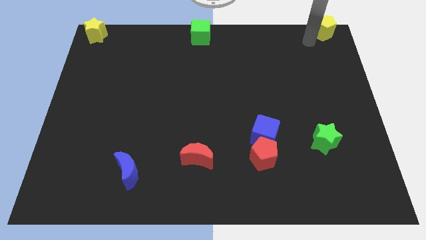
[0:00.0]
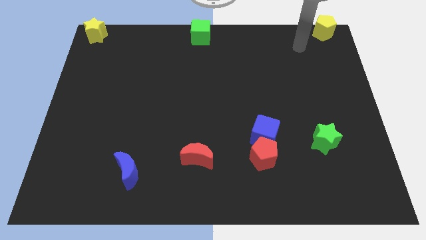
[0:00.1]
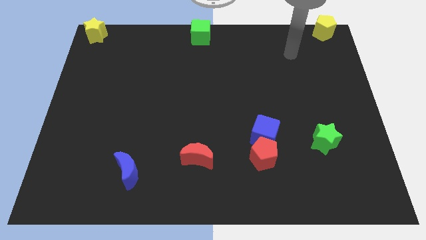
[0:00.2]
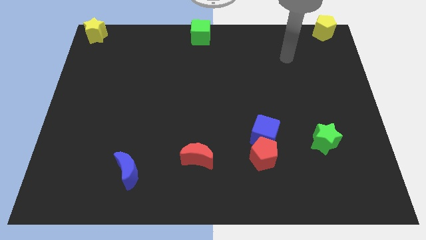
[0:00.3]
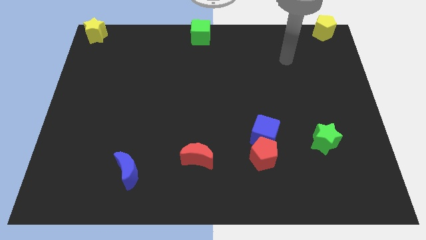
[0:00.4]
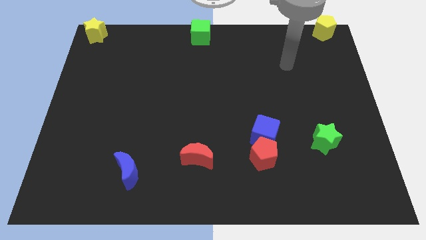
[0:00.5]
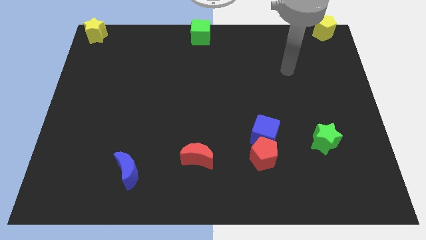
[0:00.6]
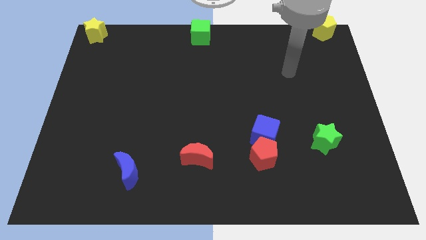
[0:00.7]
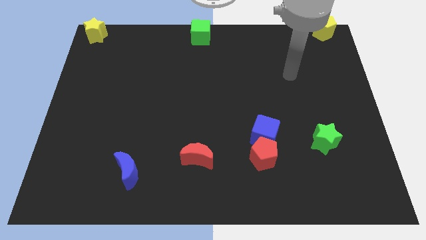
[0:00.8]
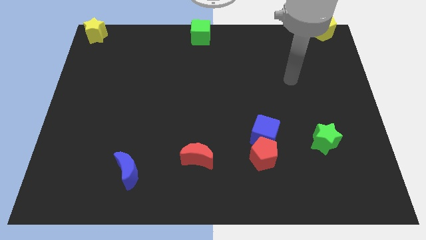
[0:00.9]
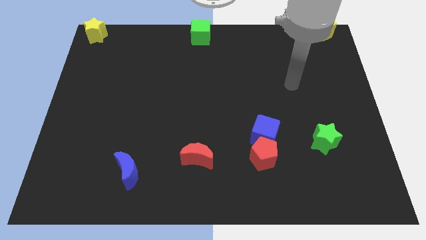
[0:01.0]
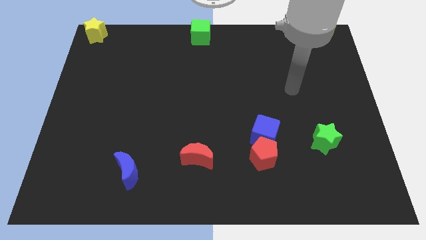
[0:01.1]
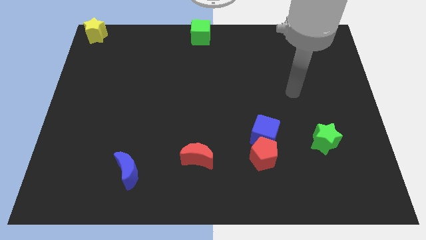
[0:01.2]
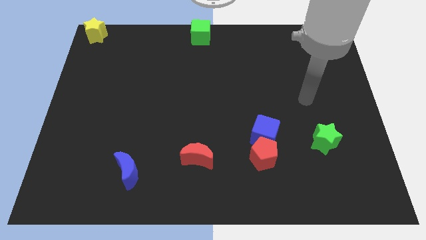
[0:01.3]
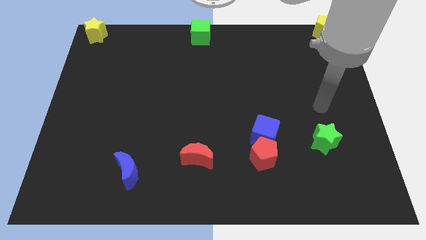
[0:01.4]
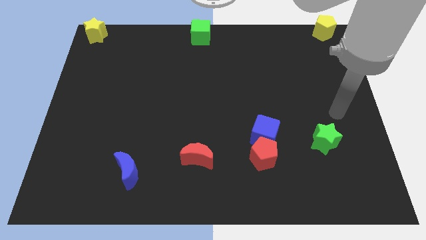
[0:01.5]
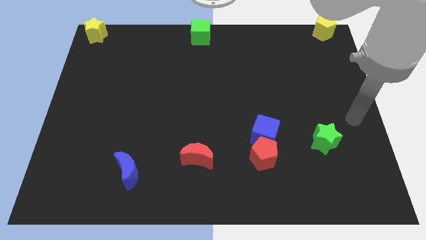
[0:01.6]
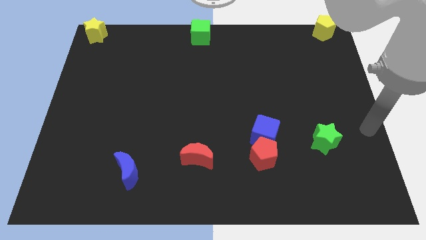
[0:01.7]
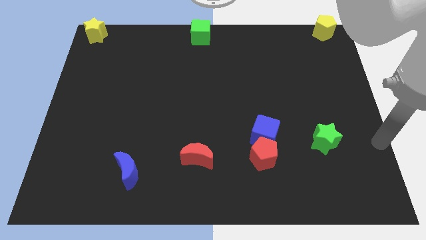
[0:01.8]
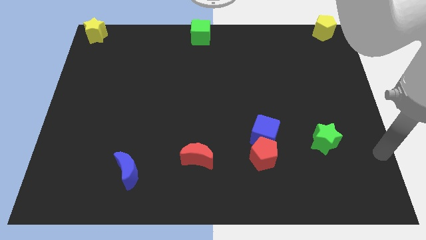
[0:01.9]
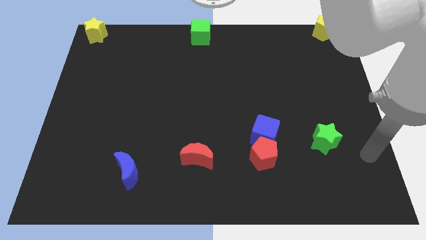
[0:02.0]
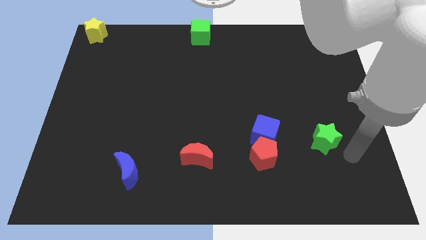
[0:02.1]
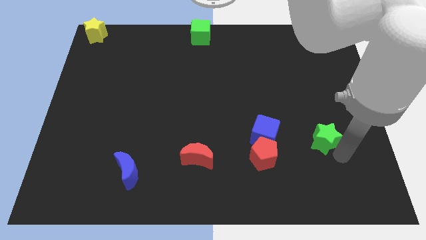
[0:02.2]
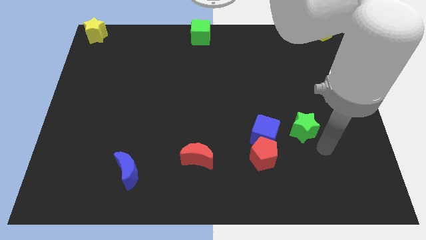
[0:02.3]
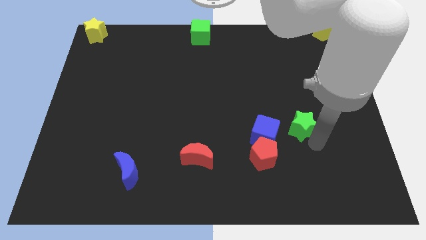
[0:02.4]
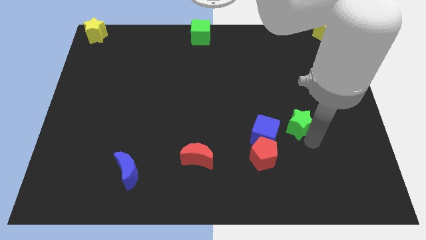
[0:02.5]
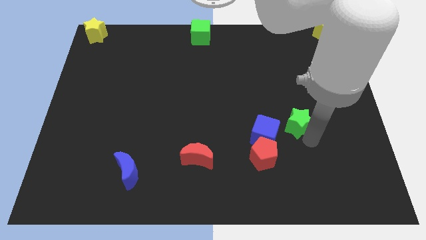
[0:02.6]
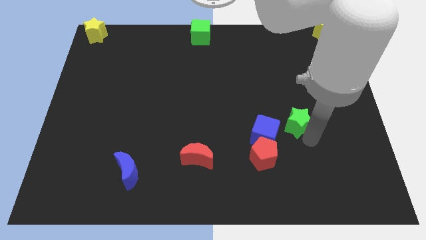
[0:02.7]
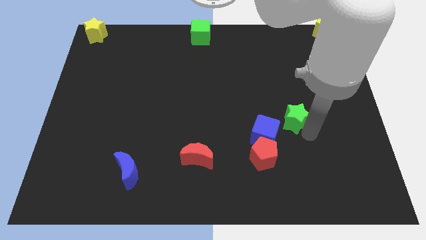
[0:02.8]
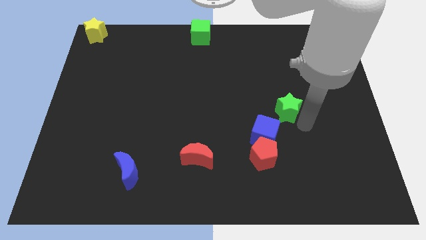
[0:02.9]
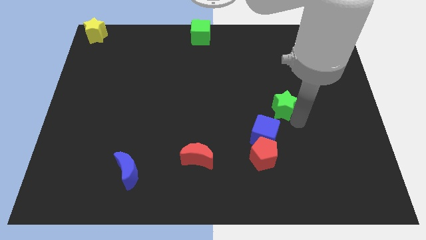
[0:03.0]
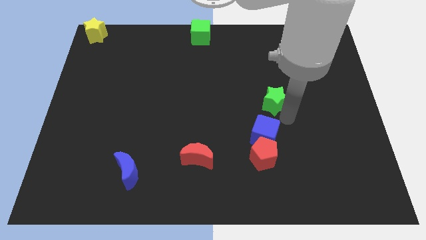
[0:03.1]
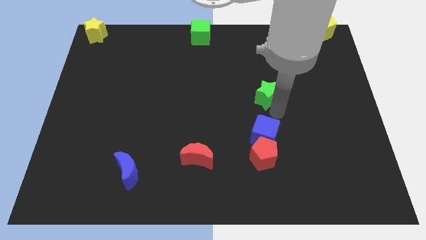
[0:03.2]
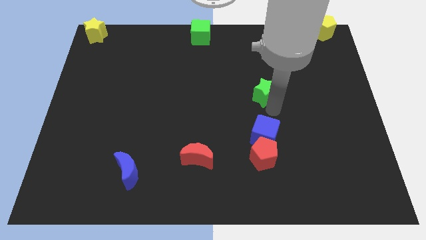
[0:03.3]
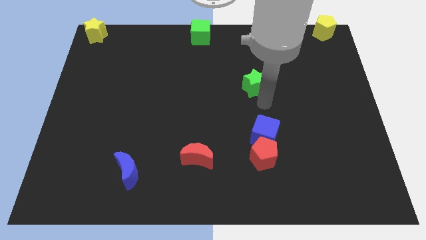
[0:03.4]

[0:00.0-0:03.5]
push the green star above the blue cube

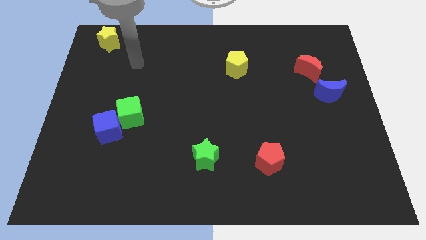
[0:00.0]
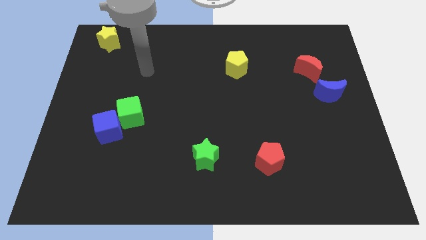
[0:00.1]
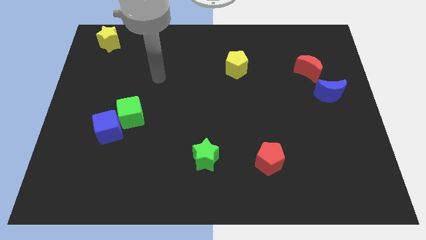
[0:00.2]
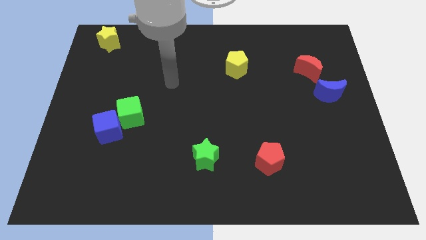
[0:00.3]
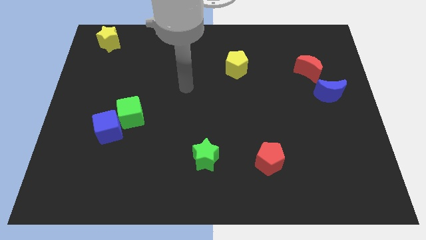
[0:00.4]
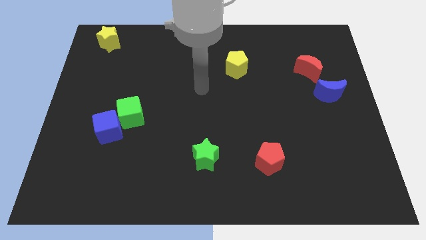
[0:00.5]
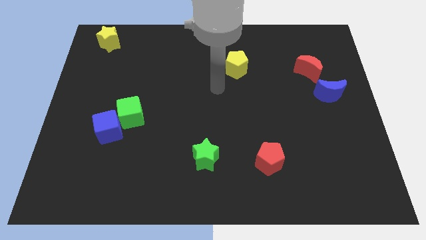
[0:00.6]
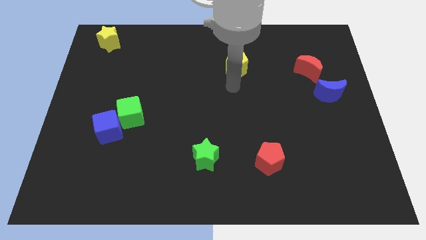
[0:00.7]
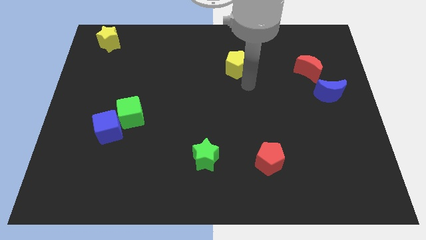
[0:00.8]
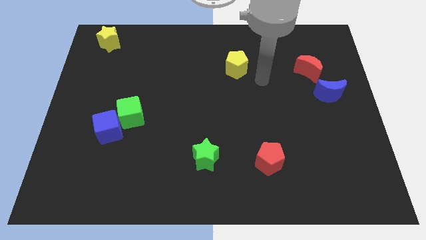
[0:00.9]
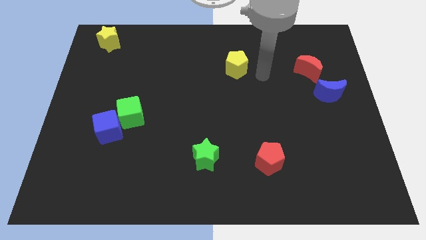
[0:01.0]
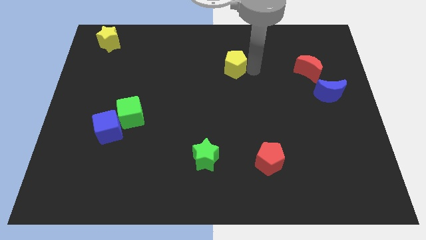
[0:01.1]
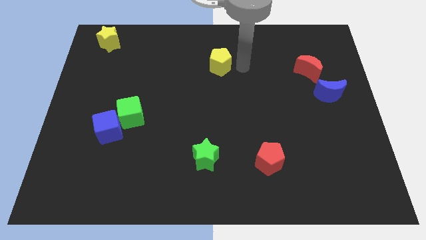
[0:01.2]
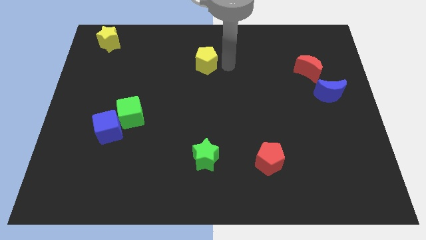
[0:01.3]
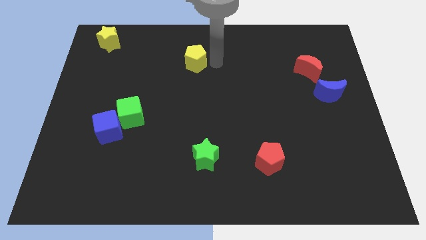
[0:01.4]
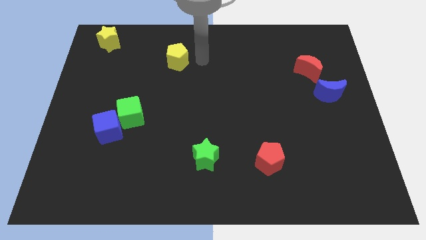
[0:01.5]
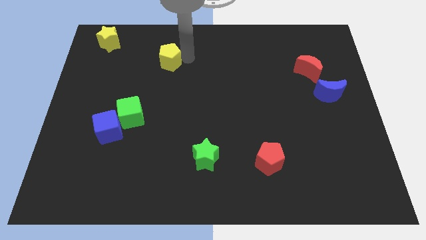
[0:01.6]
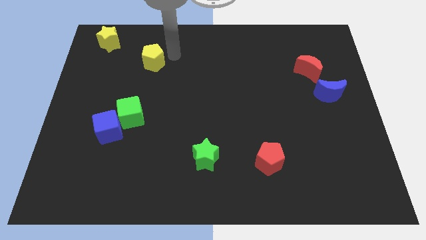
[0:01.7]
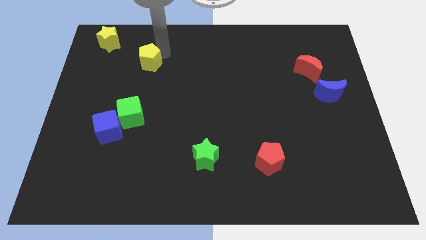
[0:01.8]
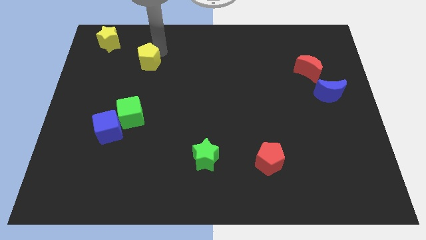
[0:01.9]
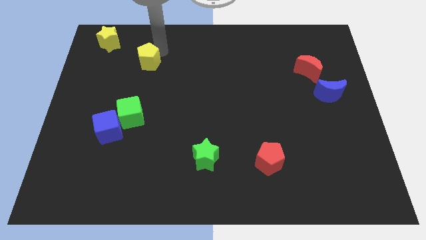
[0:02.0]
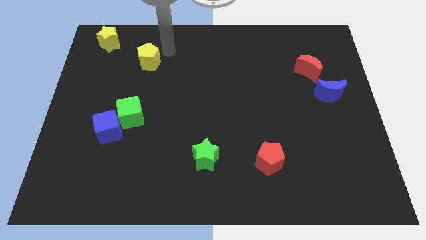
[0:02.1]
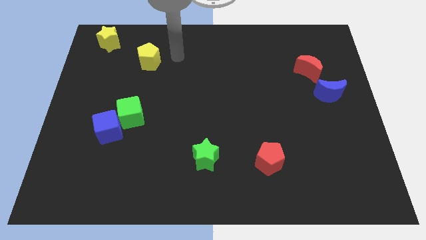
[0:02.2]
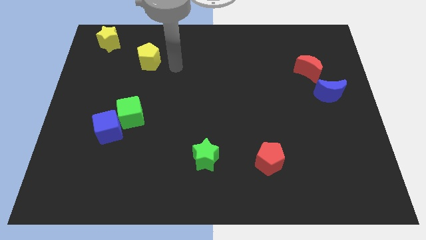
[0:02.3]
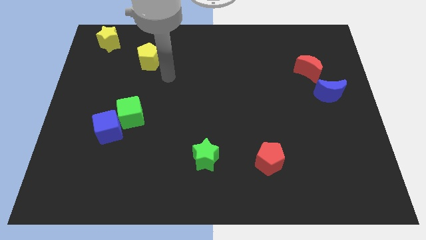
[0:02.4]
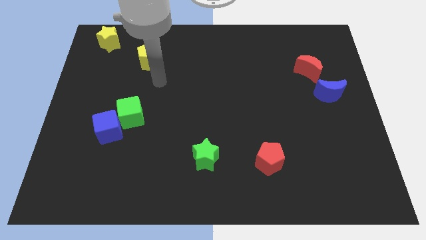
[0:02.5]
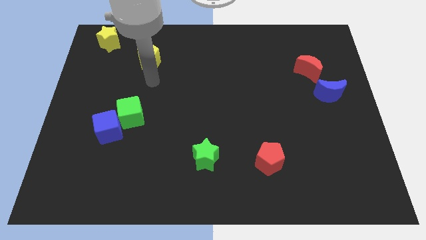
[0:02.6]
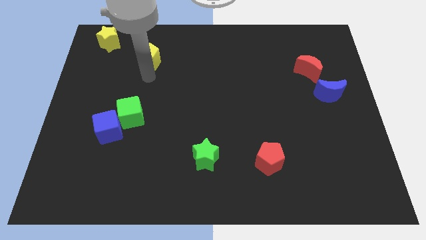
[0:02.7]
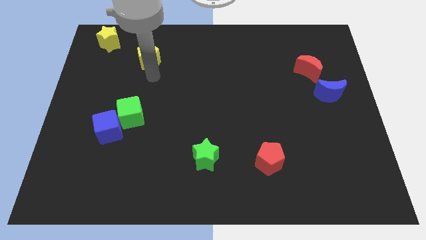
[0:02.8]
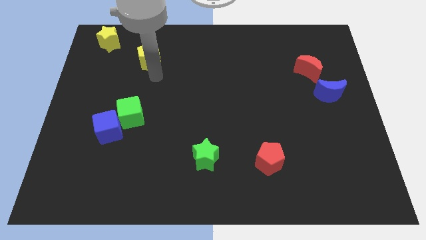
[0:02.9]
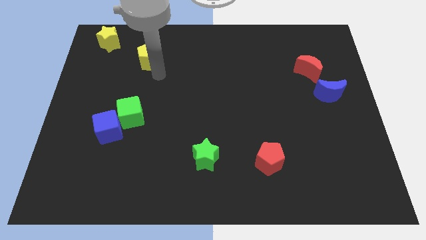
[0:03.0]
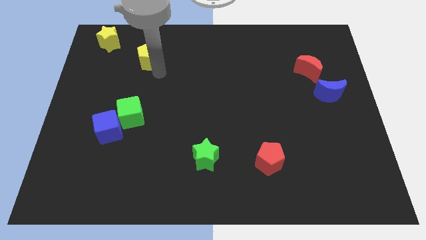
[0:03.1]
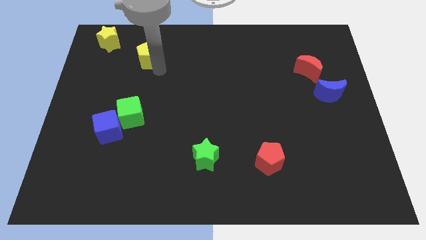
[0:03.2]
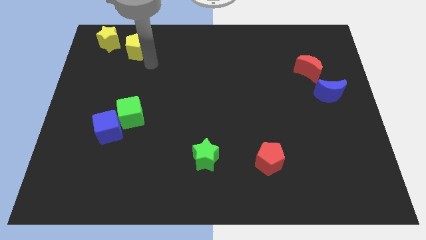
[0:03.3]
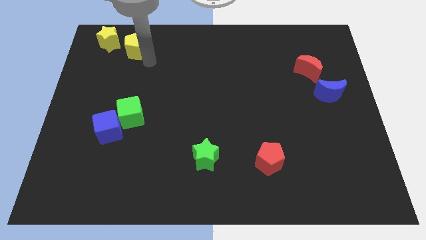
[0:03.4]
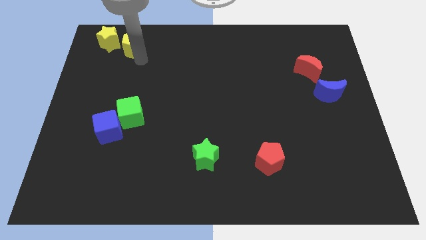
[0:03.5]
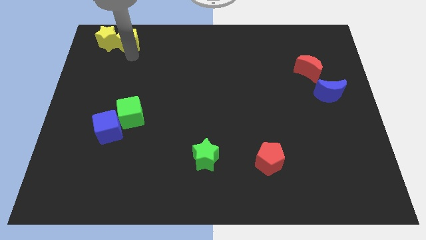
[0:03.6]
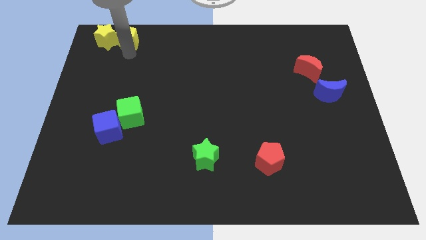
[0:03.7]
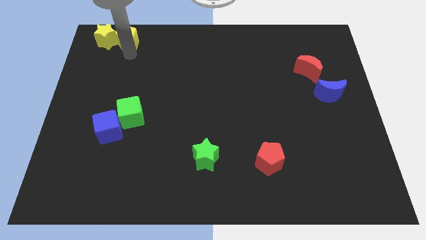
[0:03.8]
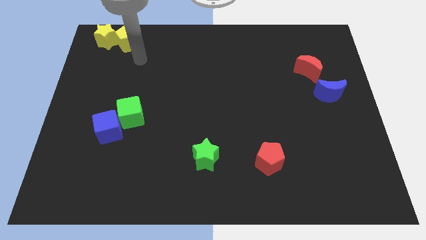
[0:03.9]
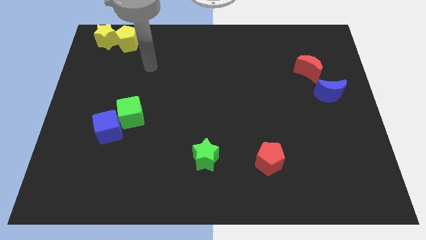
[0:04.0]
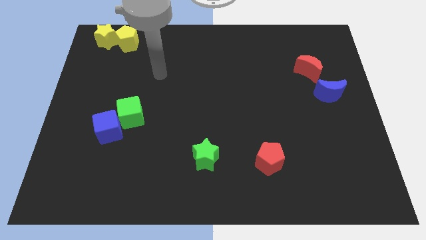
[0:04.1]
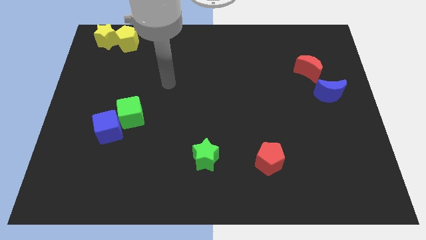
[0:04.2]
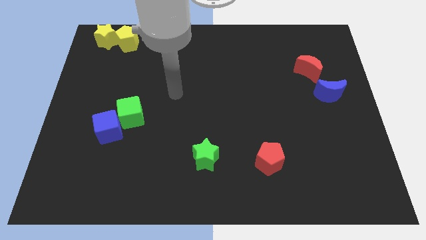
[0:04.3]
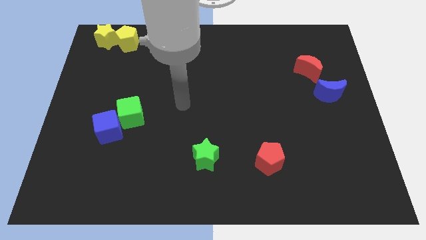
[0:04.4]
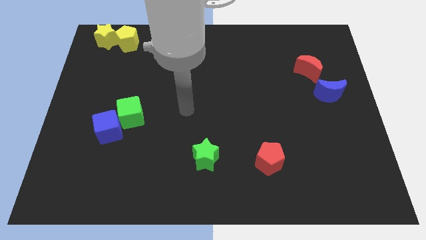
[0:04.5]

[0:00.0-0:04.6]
place the yellow pentagon to the right of yellow star

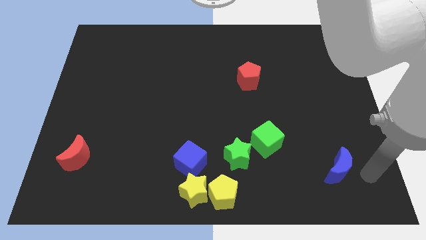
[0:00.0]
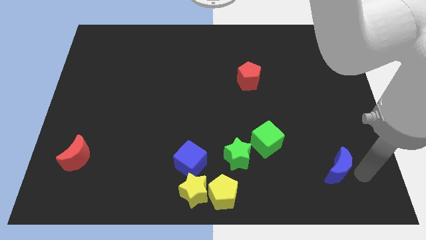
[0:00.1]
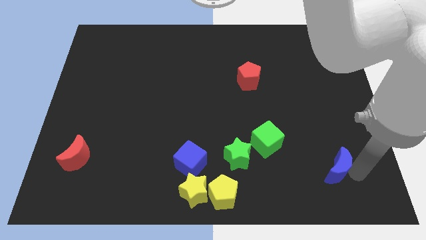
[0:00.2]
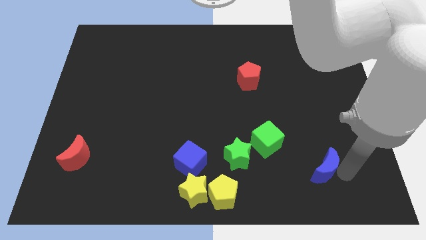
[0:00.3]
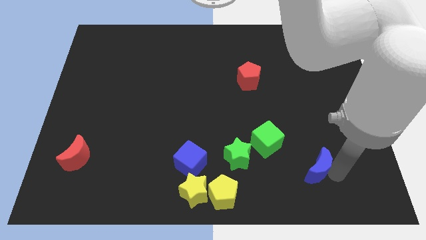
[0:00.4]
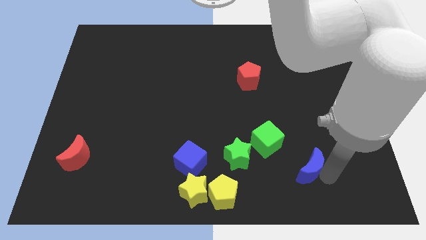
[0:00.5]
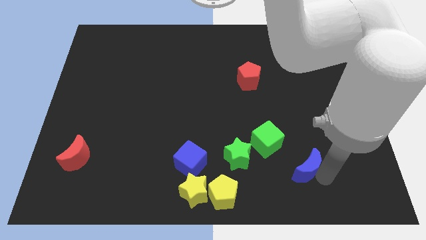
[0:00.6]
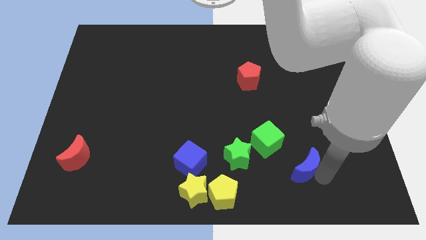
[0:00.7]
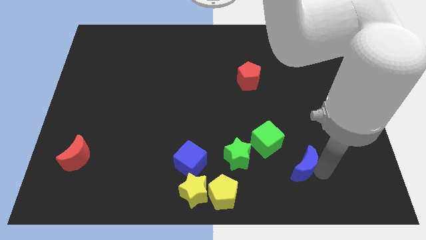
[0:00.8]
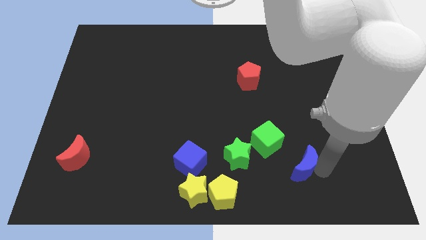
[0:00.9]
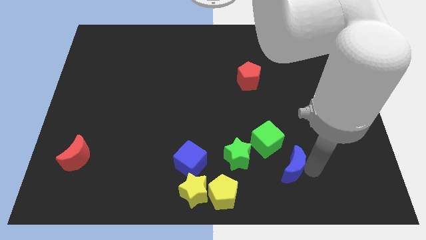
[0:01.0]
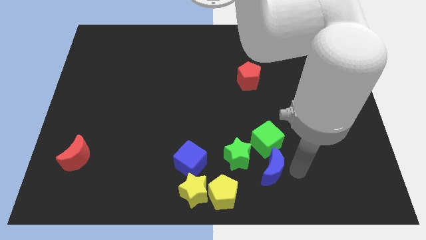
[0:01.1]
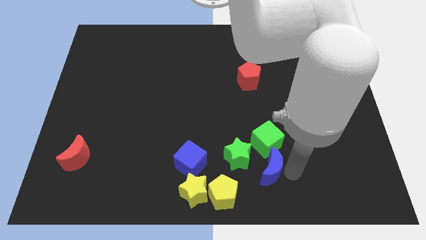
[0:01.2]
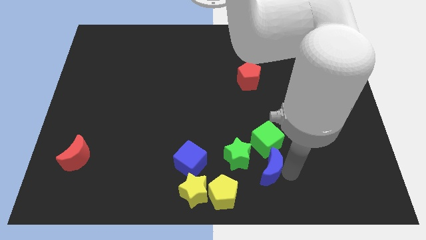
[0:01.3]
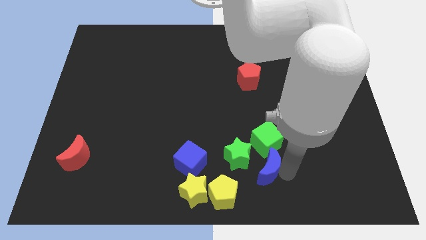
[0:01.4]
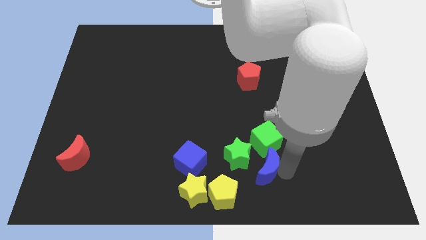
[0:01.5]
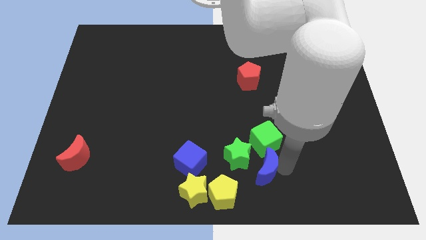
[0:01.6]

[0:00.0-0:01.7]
place blue moon below the green cube
